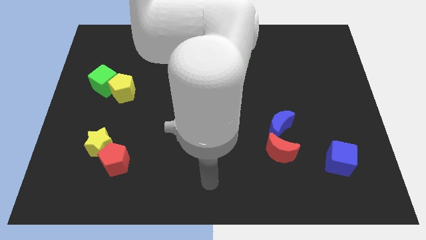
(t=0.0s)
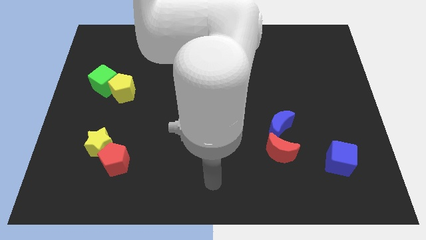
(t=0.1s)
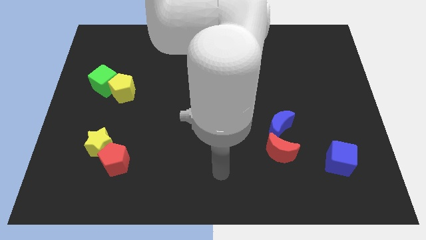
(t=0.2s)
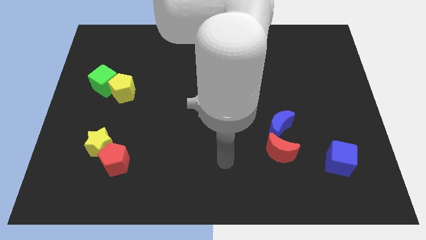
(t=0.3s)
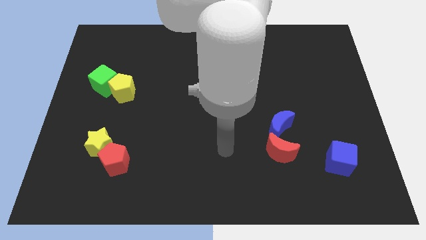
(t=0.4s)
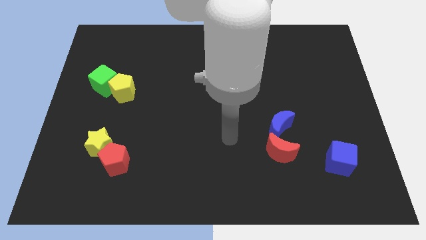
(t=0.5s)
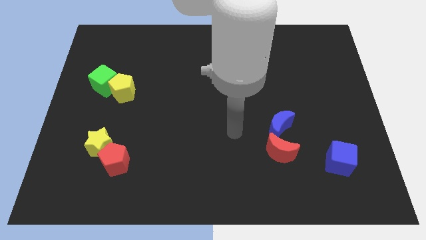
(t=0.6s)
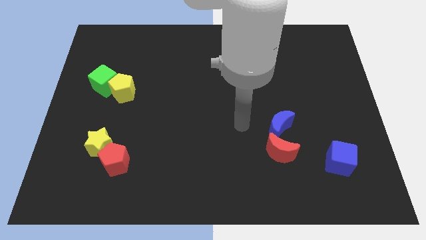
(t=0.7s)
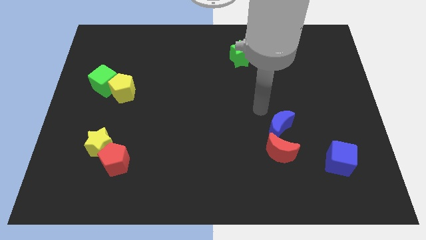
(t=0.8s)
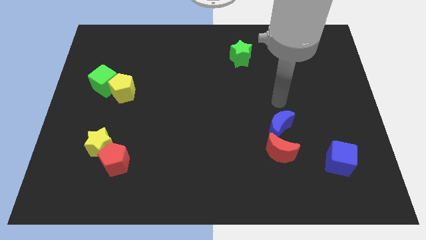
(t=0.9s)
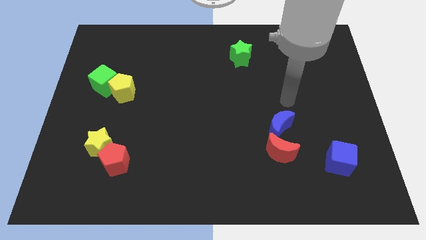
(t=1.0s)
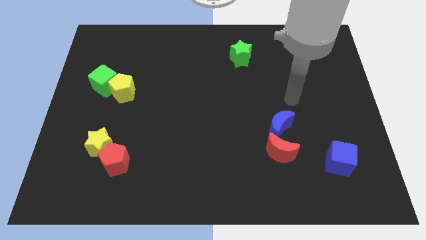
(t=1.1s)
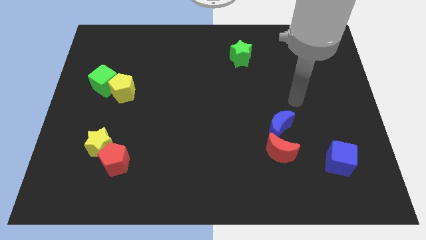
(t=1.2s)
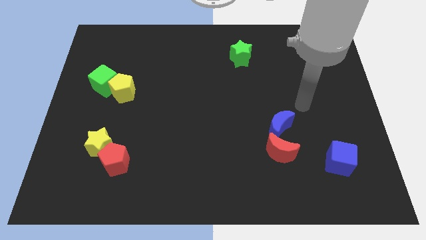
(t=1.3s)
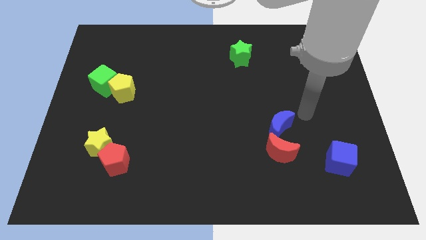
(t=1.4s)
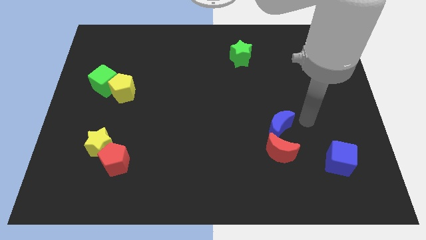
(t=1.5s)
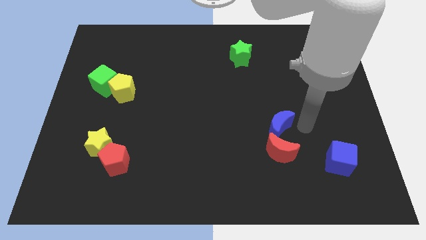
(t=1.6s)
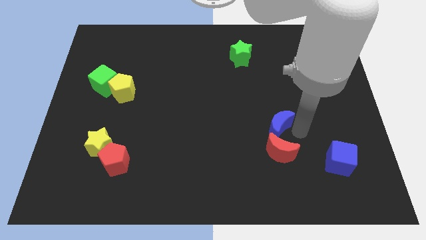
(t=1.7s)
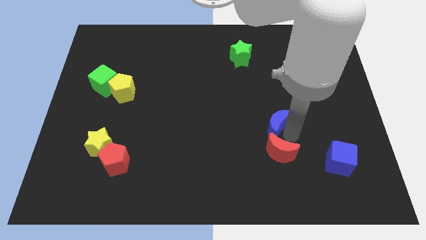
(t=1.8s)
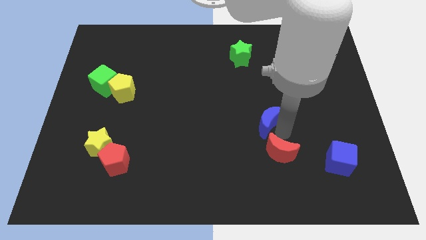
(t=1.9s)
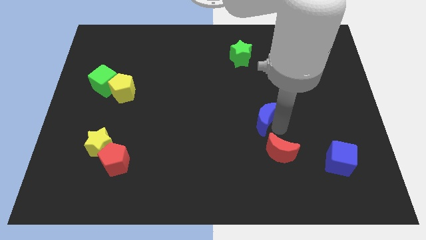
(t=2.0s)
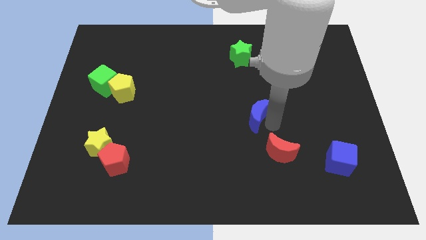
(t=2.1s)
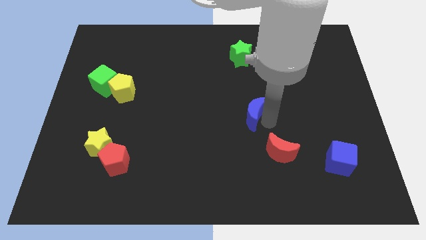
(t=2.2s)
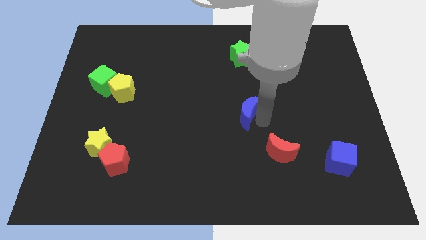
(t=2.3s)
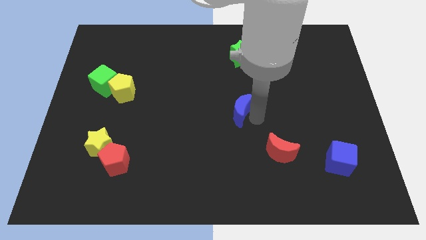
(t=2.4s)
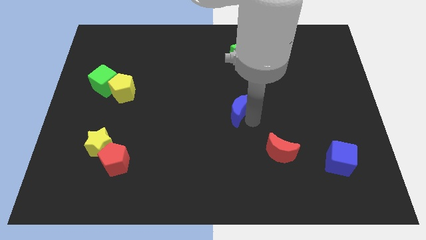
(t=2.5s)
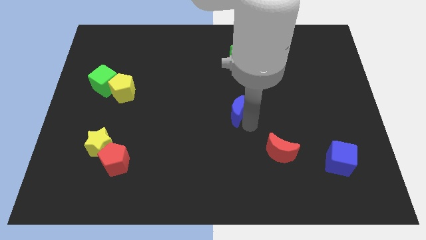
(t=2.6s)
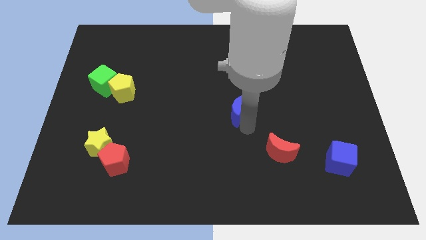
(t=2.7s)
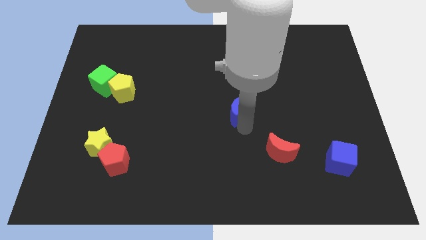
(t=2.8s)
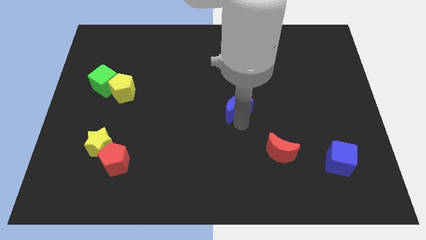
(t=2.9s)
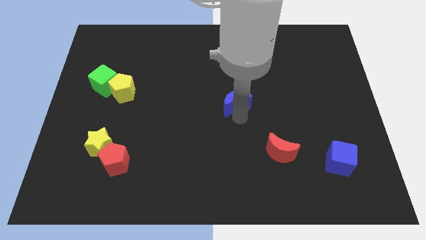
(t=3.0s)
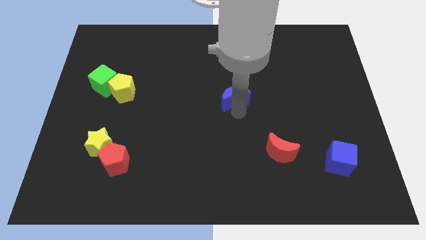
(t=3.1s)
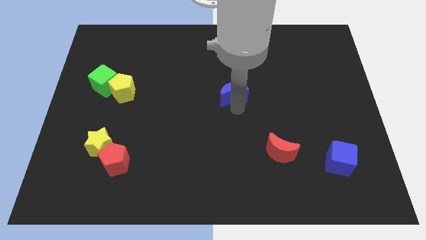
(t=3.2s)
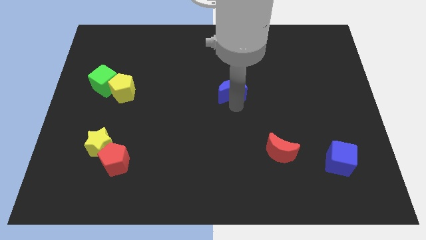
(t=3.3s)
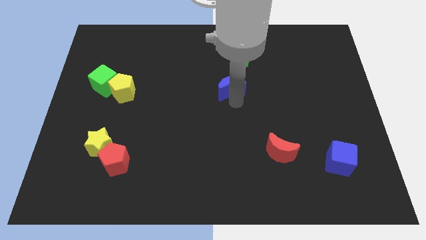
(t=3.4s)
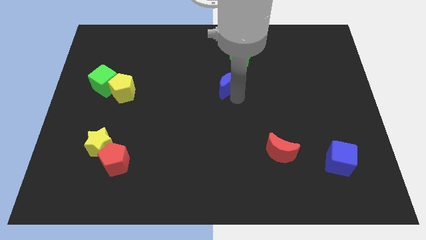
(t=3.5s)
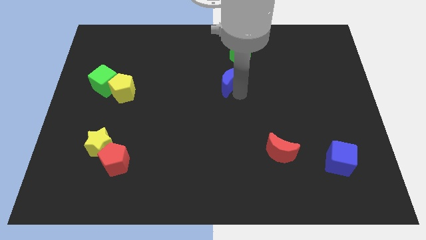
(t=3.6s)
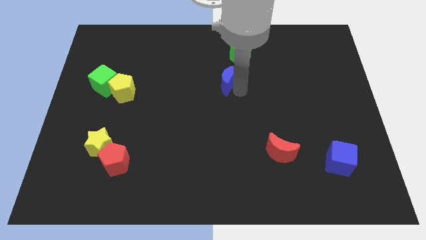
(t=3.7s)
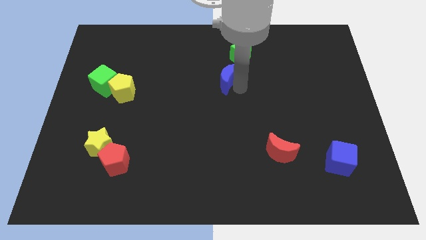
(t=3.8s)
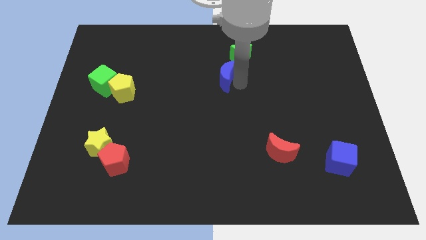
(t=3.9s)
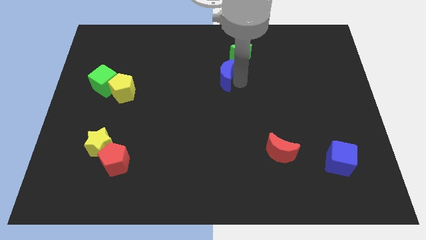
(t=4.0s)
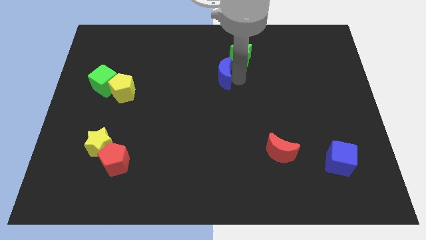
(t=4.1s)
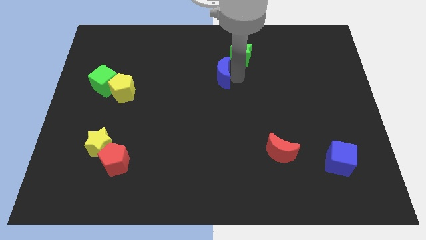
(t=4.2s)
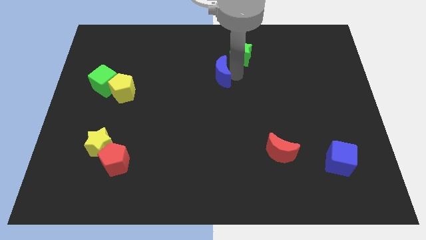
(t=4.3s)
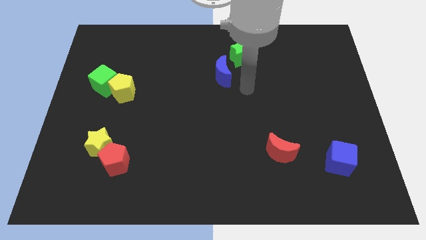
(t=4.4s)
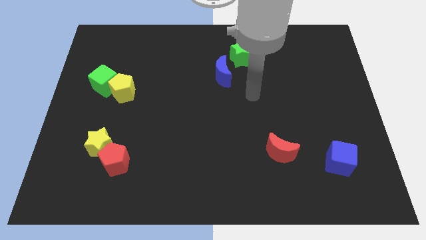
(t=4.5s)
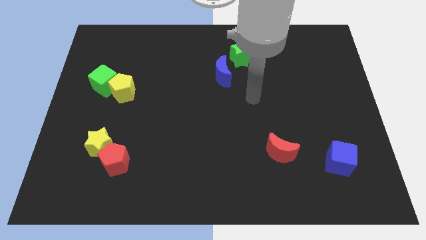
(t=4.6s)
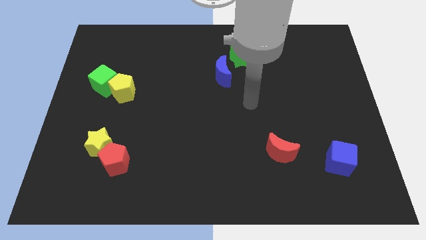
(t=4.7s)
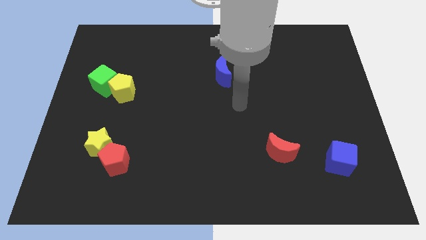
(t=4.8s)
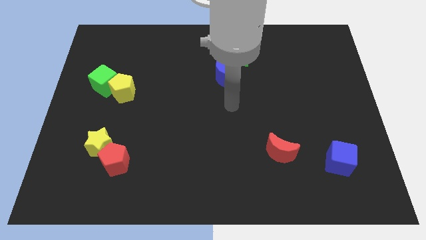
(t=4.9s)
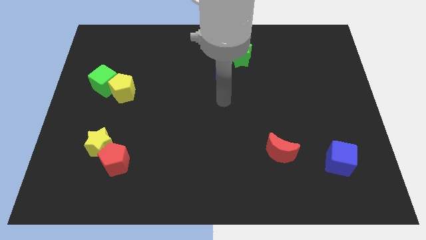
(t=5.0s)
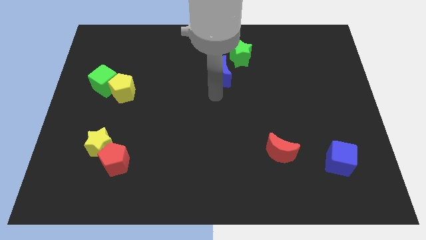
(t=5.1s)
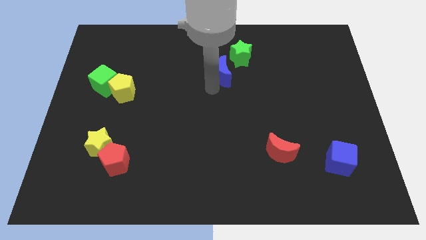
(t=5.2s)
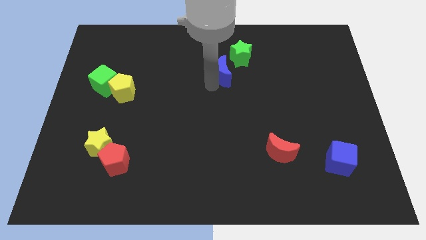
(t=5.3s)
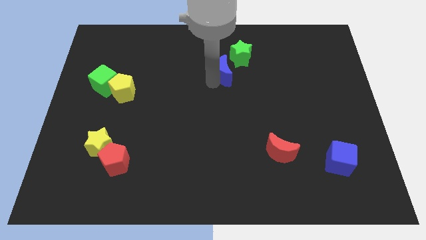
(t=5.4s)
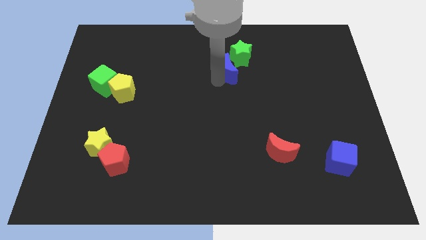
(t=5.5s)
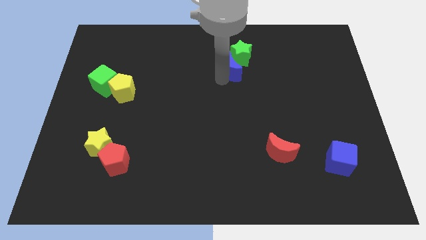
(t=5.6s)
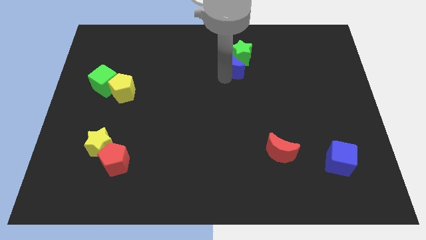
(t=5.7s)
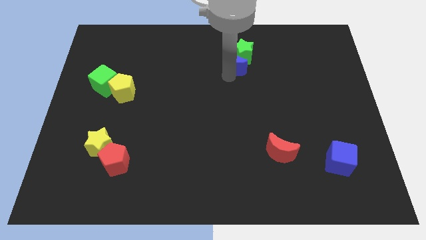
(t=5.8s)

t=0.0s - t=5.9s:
push the blue moon next to the green star

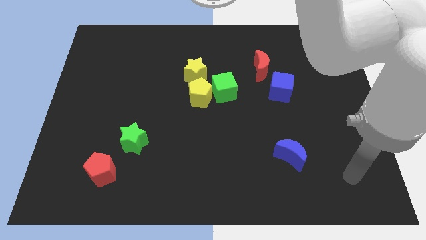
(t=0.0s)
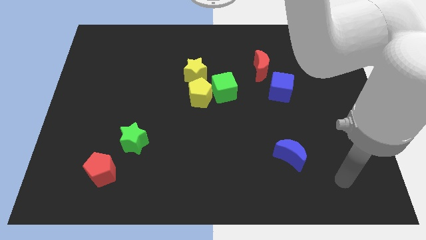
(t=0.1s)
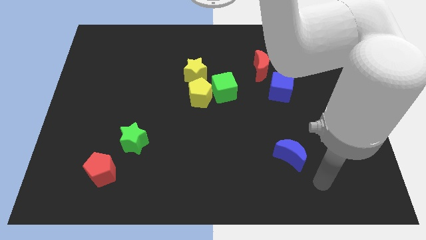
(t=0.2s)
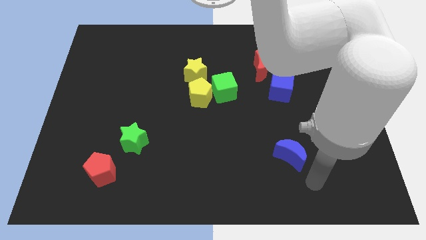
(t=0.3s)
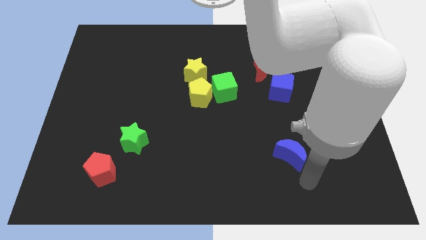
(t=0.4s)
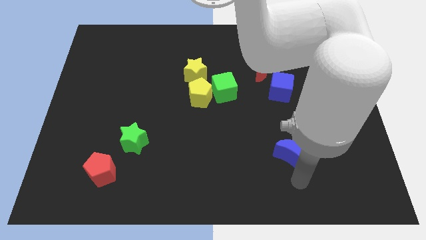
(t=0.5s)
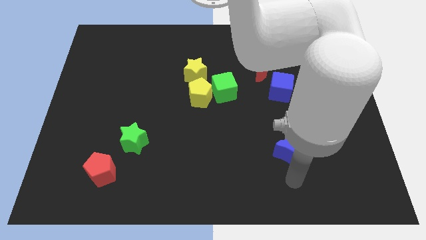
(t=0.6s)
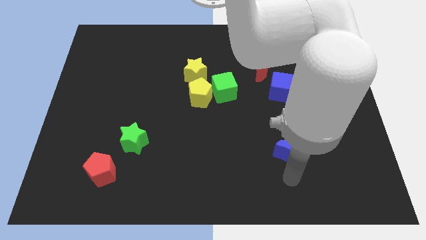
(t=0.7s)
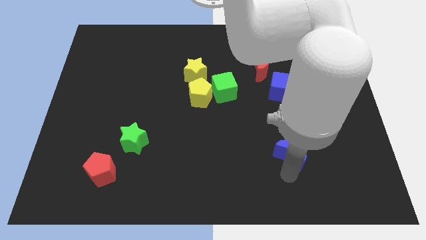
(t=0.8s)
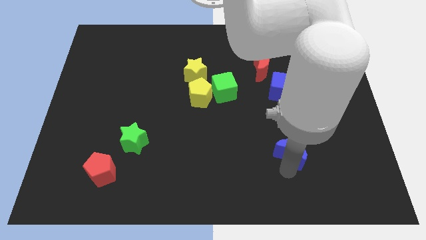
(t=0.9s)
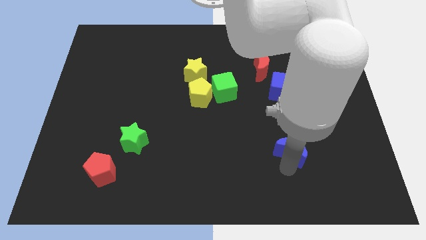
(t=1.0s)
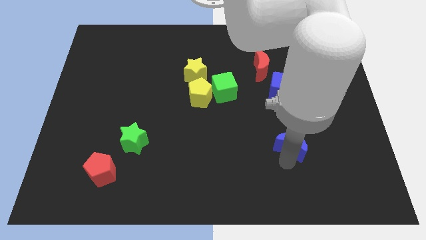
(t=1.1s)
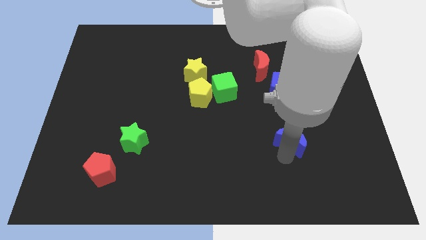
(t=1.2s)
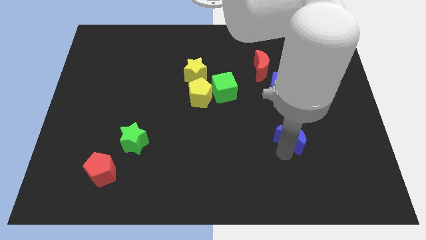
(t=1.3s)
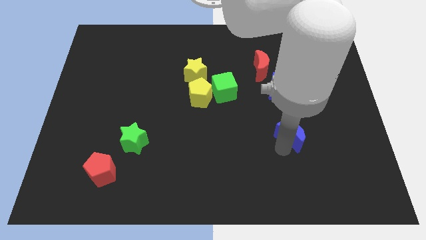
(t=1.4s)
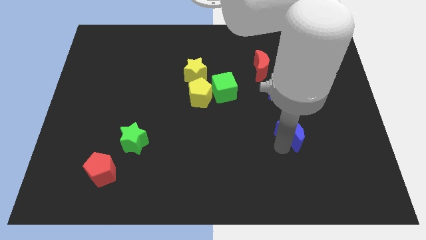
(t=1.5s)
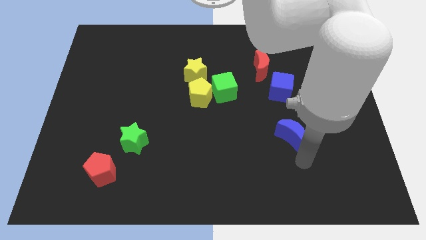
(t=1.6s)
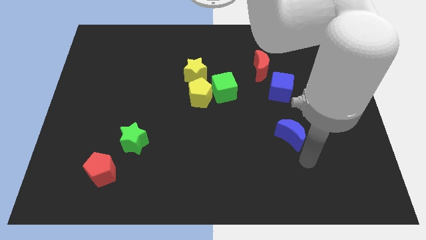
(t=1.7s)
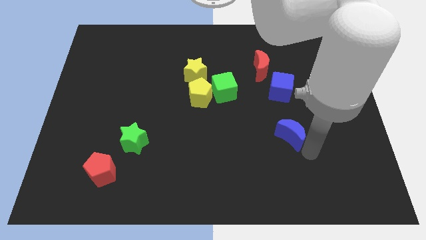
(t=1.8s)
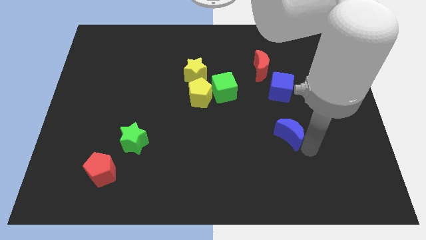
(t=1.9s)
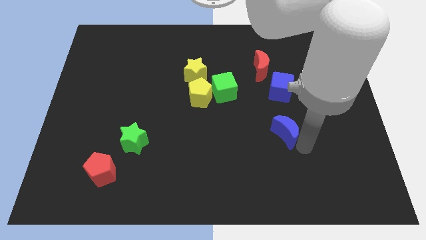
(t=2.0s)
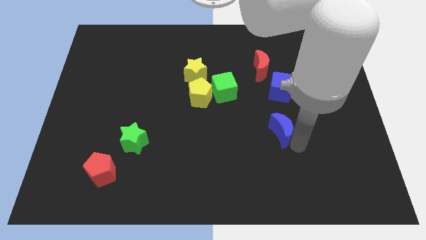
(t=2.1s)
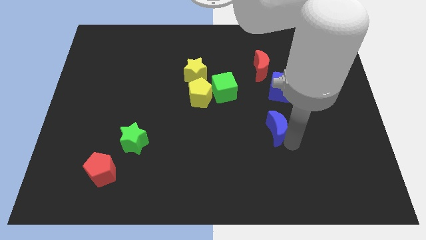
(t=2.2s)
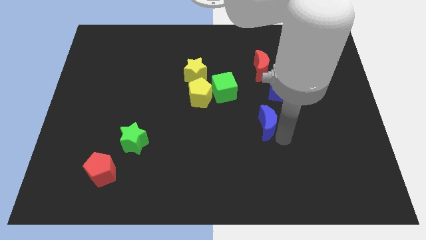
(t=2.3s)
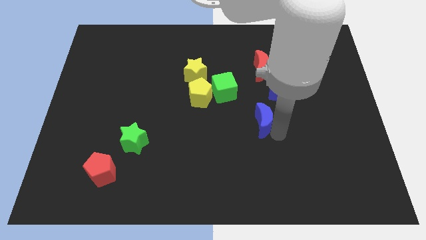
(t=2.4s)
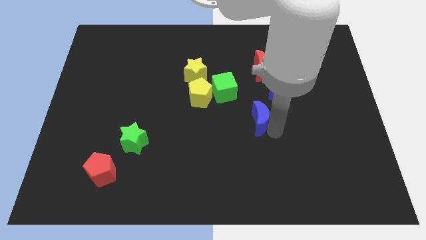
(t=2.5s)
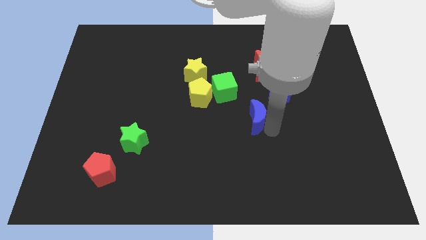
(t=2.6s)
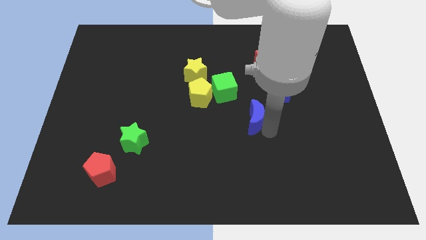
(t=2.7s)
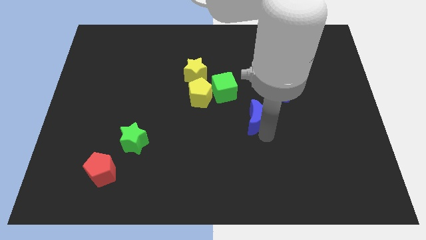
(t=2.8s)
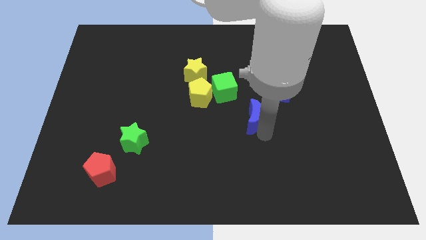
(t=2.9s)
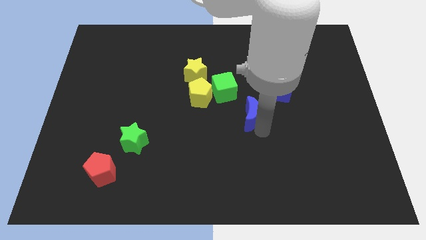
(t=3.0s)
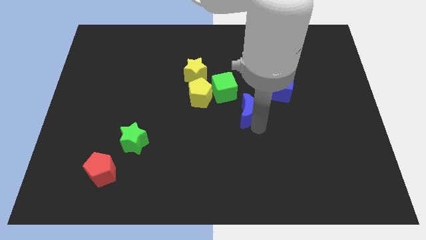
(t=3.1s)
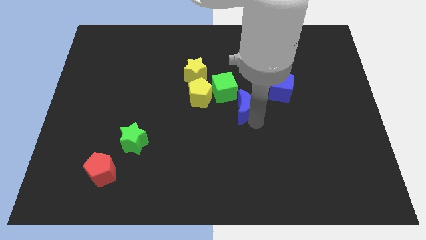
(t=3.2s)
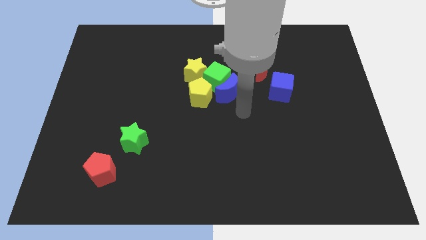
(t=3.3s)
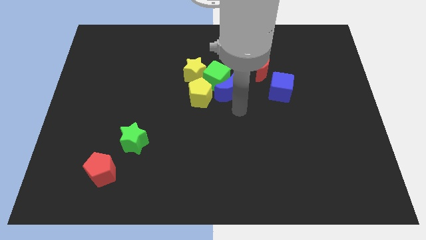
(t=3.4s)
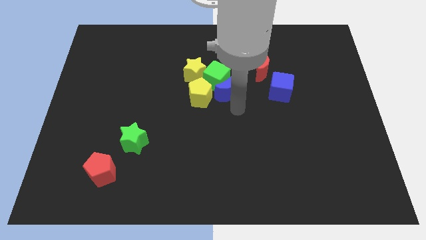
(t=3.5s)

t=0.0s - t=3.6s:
put the blue moon close to the green cube
